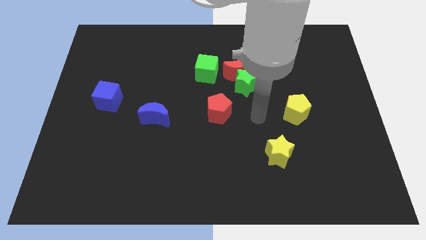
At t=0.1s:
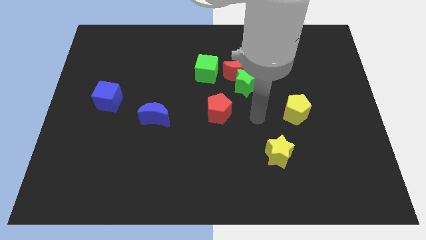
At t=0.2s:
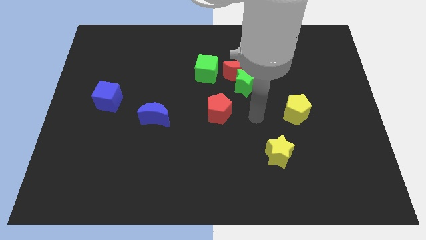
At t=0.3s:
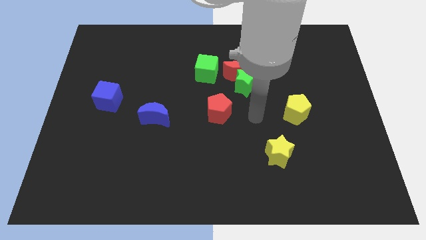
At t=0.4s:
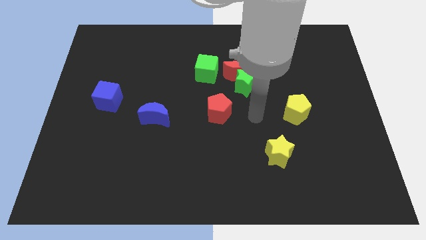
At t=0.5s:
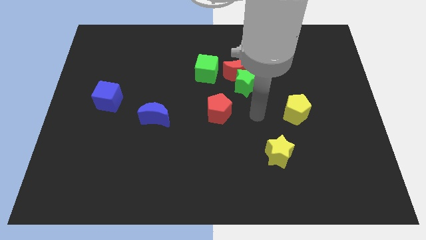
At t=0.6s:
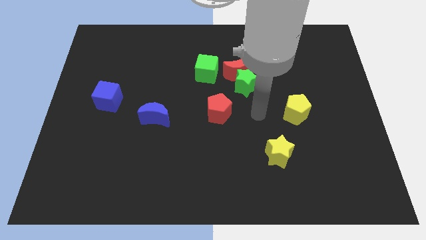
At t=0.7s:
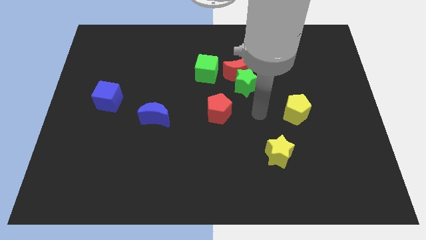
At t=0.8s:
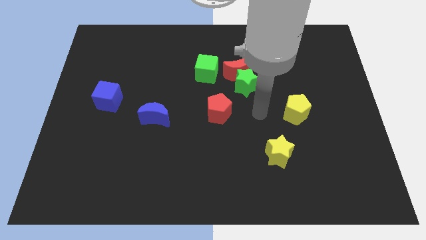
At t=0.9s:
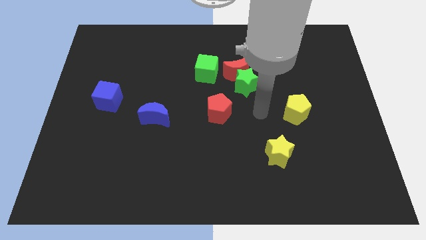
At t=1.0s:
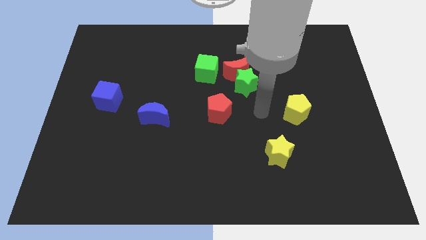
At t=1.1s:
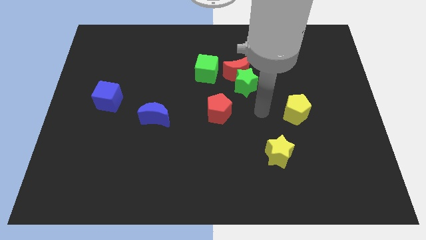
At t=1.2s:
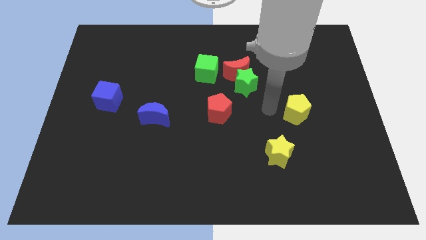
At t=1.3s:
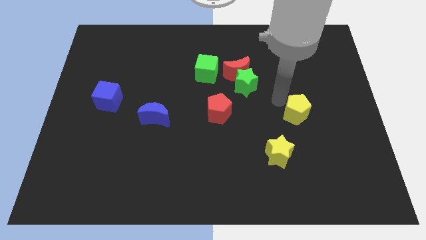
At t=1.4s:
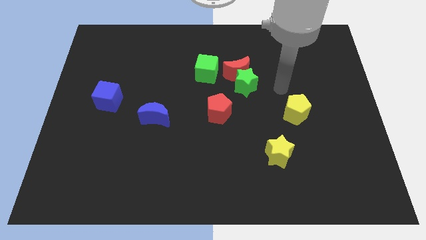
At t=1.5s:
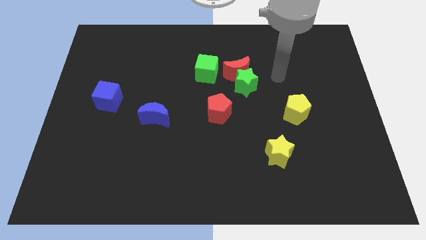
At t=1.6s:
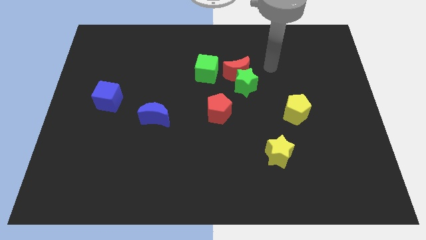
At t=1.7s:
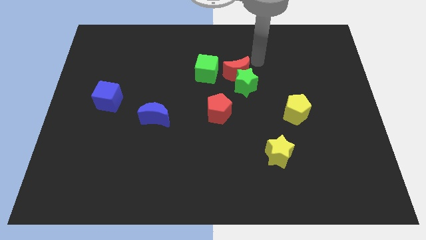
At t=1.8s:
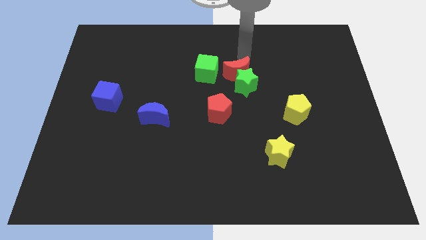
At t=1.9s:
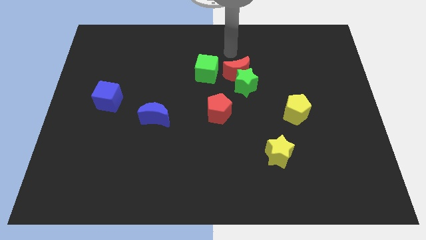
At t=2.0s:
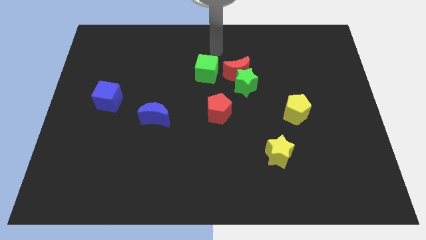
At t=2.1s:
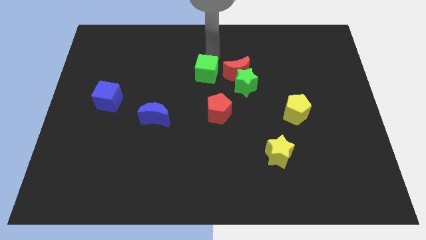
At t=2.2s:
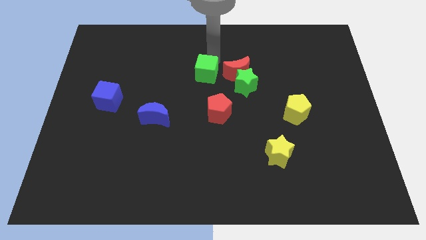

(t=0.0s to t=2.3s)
move arm near green cube

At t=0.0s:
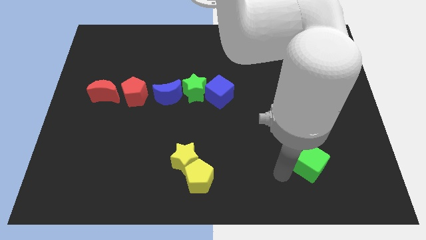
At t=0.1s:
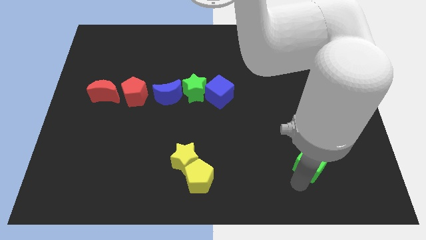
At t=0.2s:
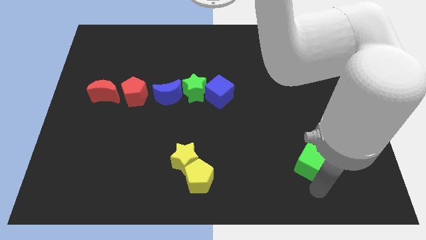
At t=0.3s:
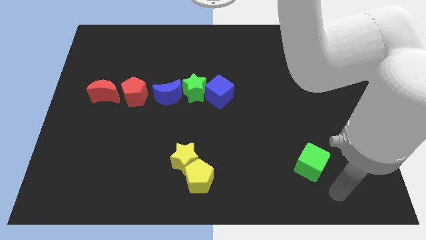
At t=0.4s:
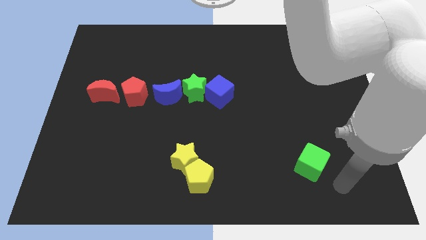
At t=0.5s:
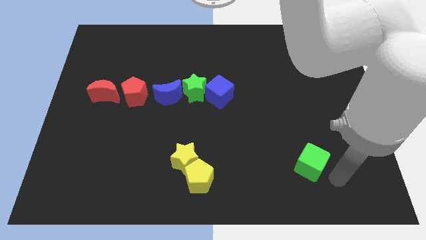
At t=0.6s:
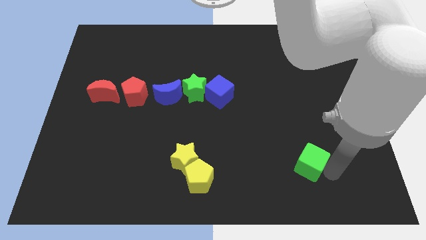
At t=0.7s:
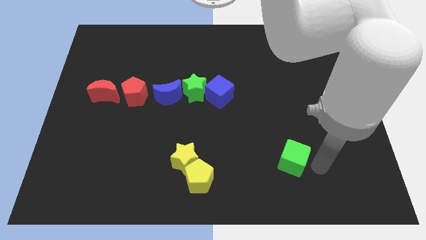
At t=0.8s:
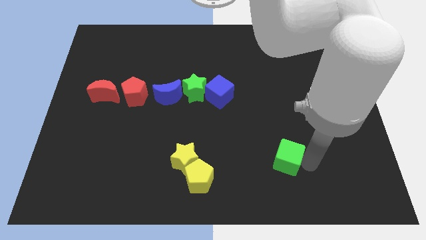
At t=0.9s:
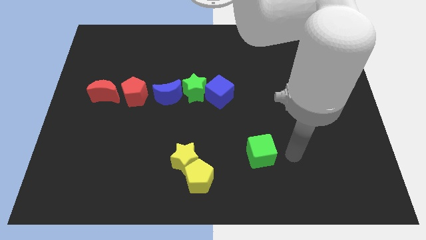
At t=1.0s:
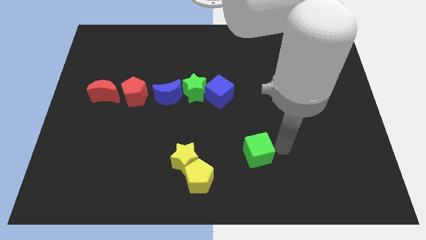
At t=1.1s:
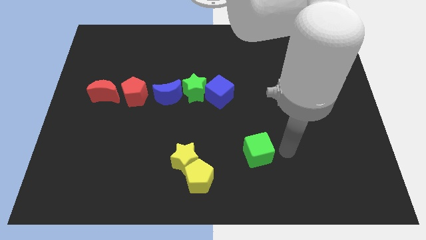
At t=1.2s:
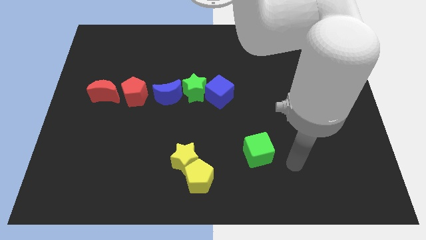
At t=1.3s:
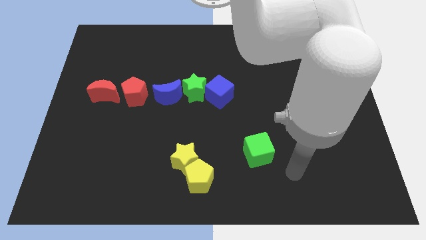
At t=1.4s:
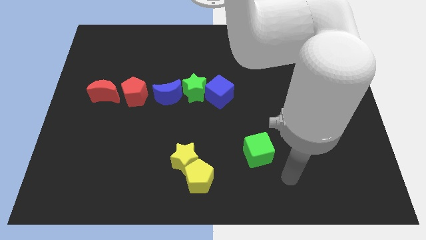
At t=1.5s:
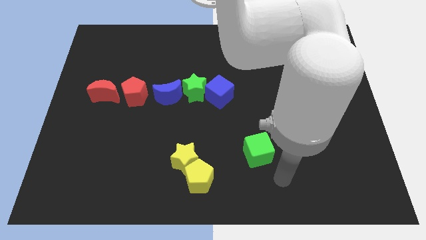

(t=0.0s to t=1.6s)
place green cube top right to the yellow pentagon

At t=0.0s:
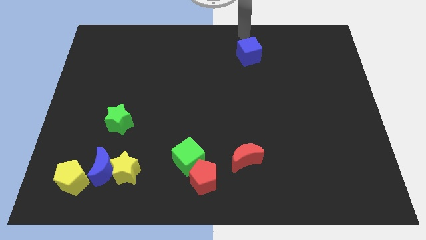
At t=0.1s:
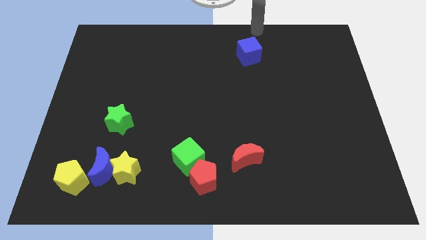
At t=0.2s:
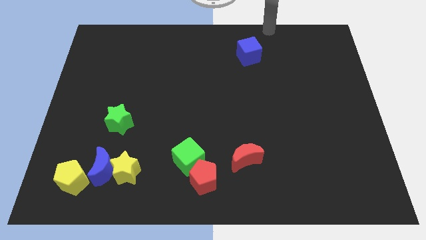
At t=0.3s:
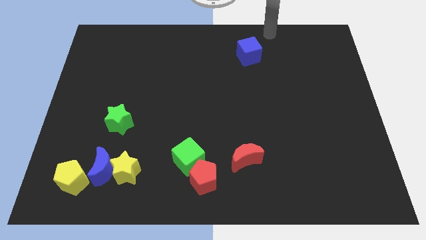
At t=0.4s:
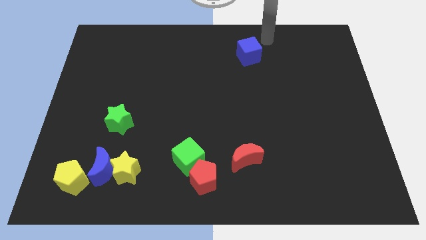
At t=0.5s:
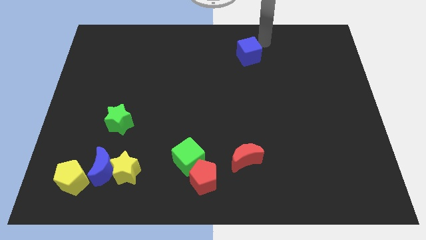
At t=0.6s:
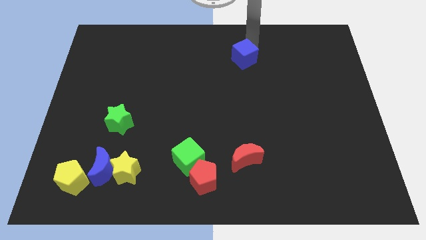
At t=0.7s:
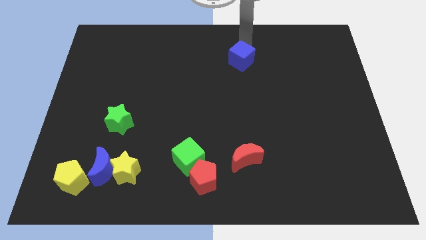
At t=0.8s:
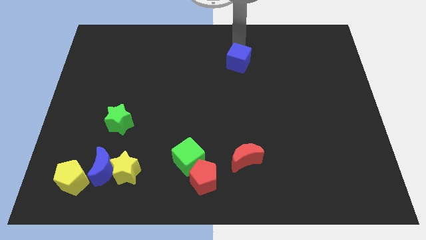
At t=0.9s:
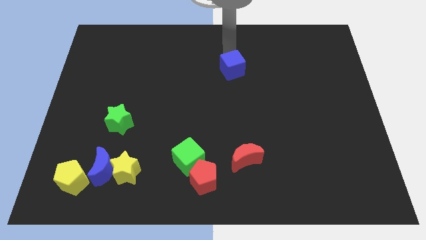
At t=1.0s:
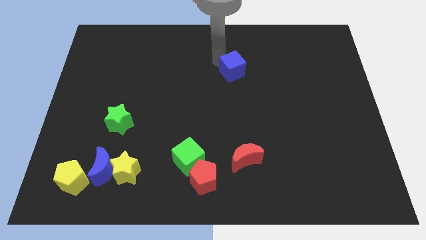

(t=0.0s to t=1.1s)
slide the blue cube slightly downwards

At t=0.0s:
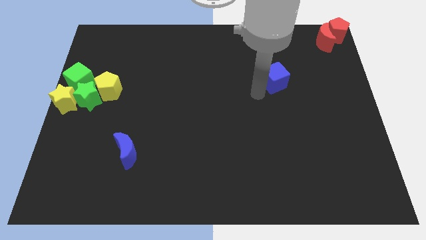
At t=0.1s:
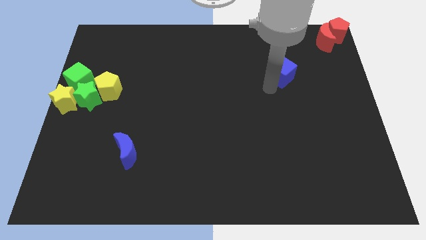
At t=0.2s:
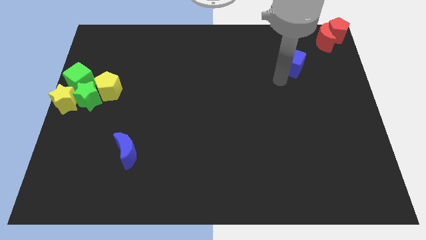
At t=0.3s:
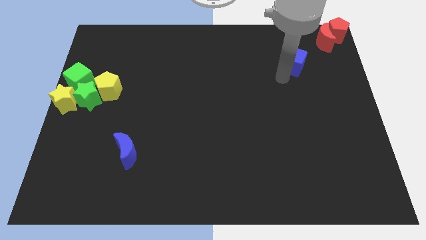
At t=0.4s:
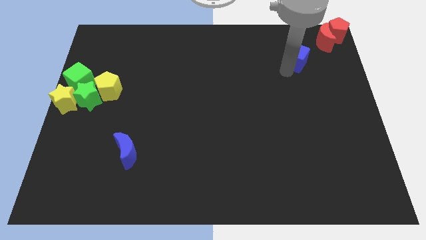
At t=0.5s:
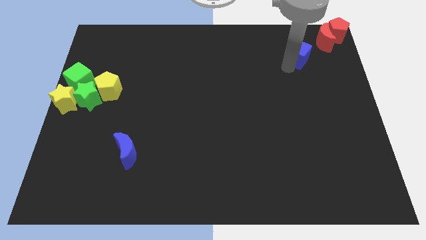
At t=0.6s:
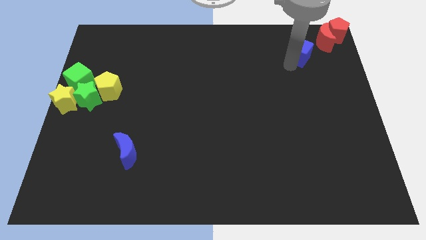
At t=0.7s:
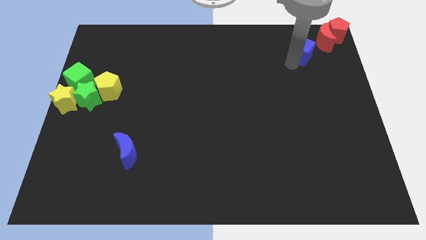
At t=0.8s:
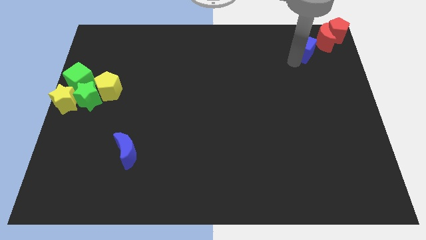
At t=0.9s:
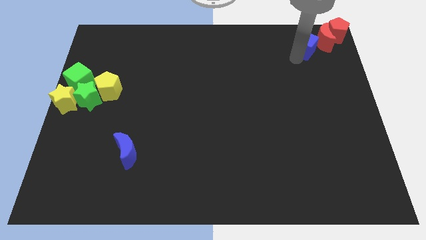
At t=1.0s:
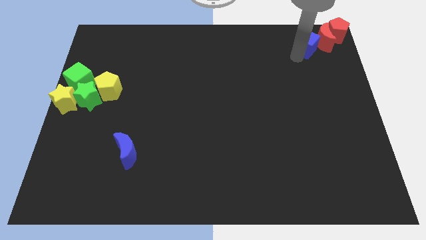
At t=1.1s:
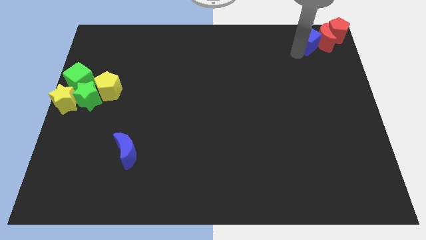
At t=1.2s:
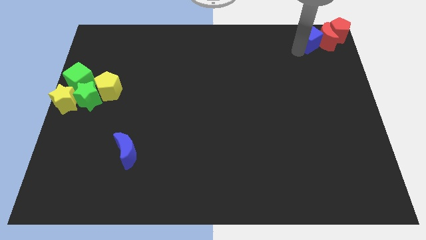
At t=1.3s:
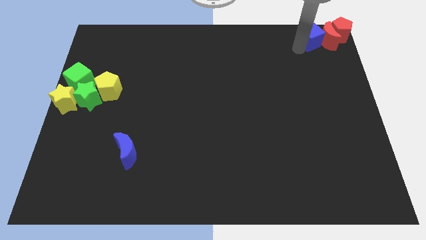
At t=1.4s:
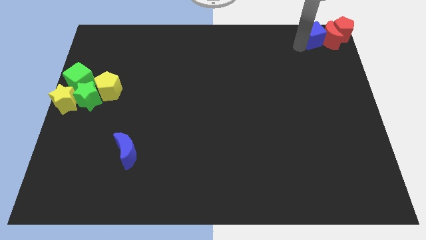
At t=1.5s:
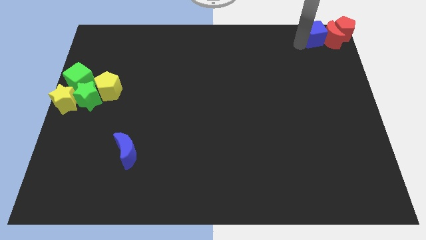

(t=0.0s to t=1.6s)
move the blue cube to the top right corner of the board

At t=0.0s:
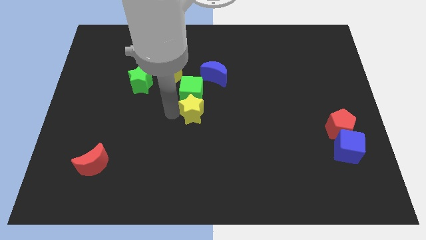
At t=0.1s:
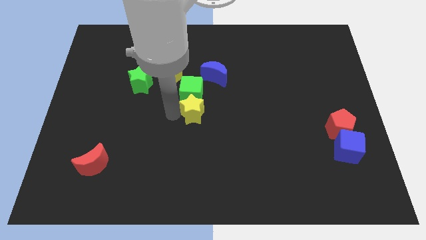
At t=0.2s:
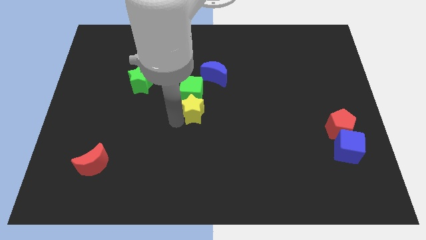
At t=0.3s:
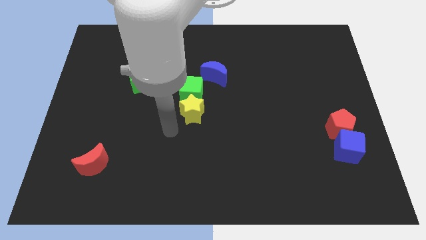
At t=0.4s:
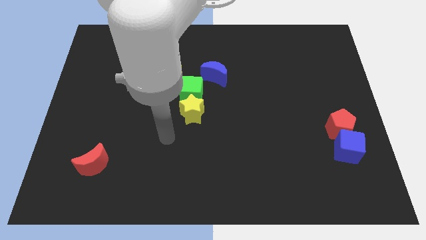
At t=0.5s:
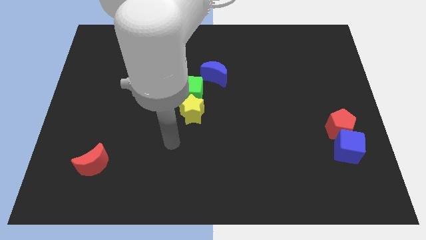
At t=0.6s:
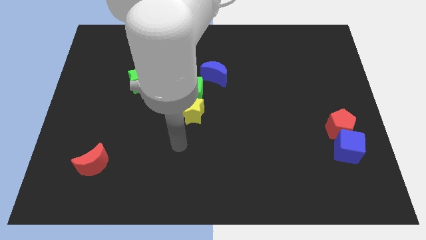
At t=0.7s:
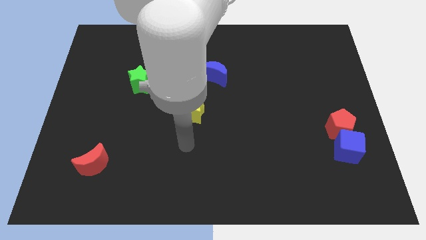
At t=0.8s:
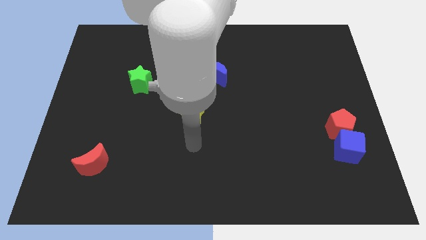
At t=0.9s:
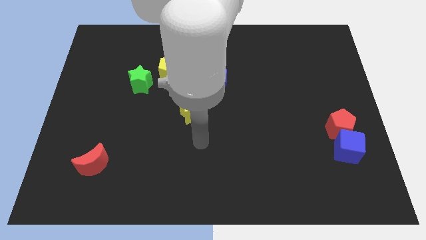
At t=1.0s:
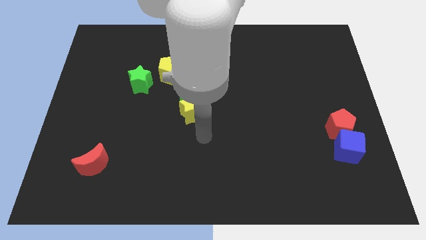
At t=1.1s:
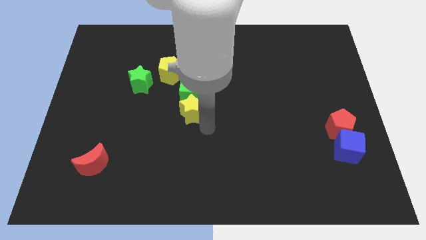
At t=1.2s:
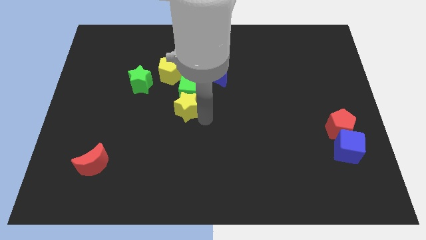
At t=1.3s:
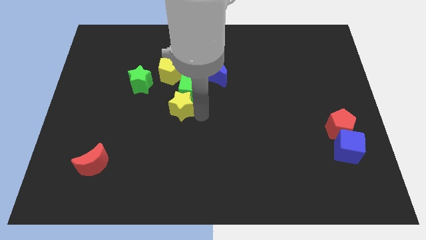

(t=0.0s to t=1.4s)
touch at the right side of the yellow star

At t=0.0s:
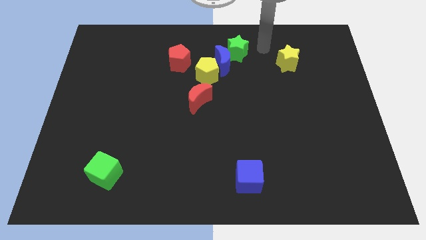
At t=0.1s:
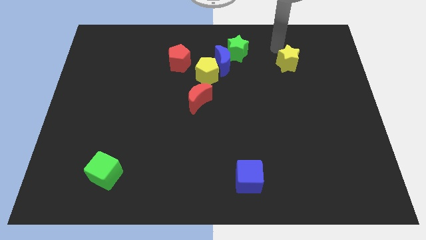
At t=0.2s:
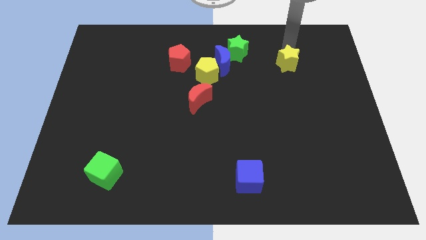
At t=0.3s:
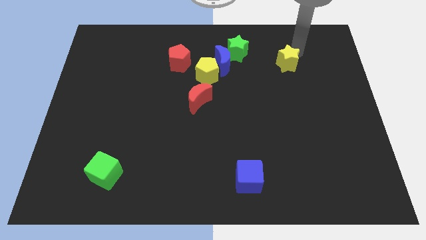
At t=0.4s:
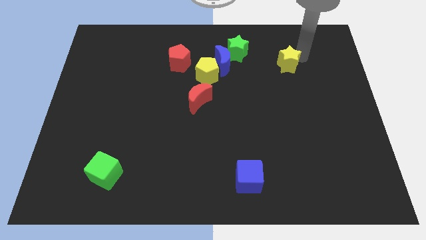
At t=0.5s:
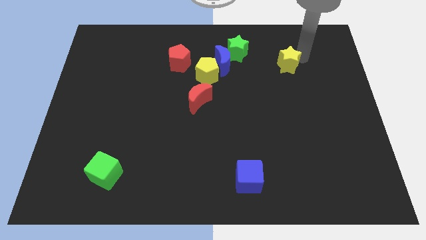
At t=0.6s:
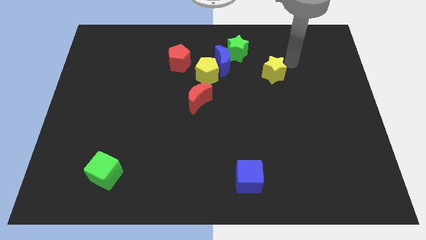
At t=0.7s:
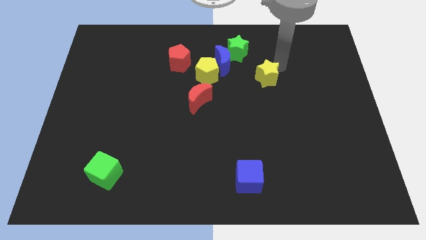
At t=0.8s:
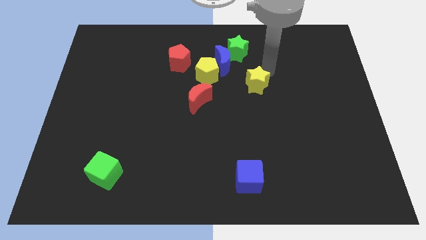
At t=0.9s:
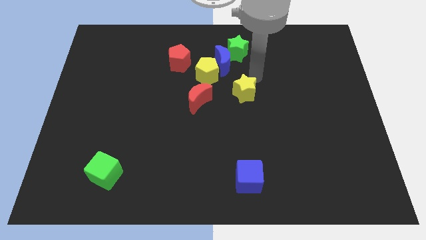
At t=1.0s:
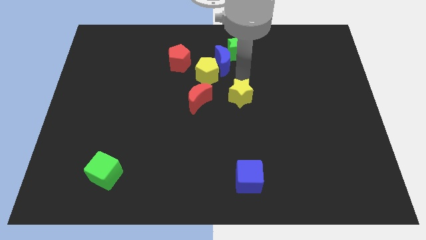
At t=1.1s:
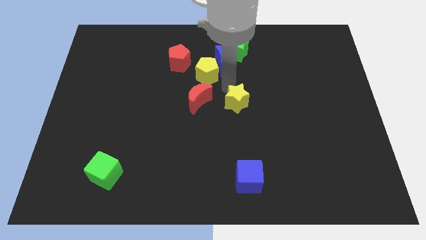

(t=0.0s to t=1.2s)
place the yellow star right to the red moon
